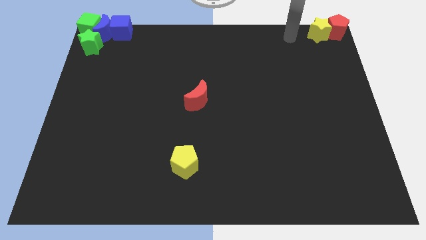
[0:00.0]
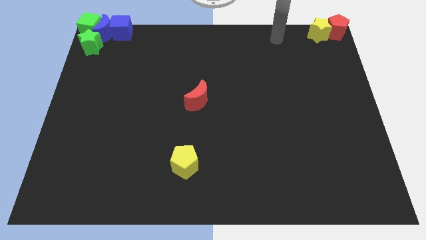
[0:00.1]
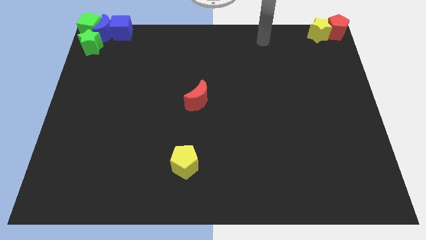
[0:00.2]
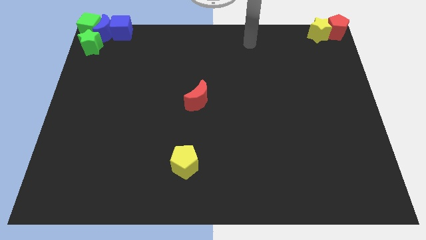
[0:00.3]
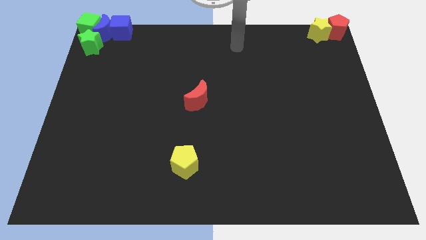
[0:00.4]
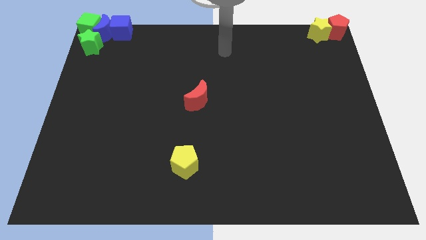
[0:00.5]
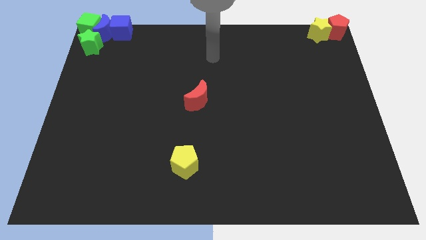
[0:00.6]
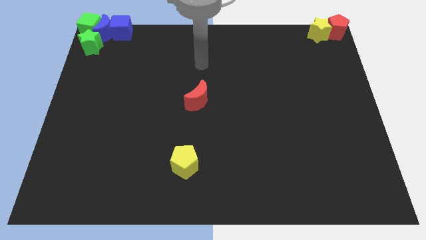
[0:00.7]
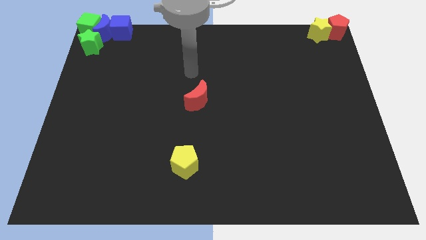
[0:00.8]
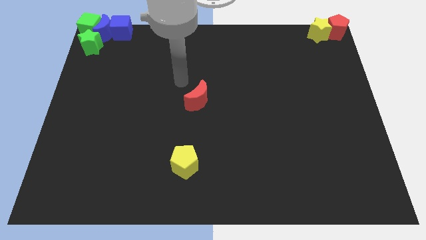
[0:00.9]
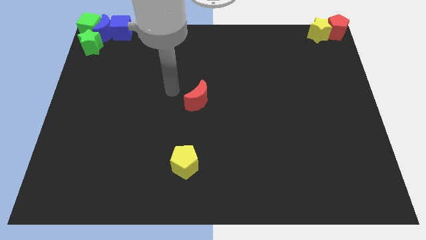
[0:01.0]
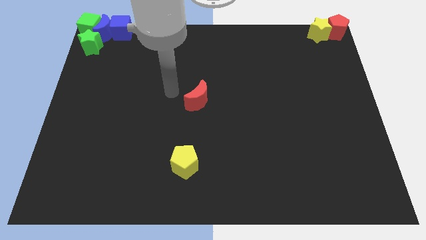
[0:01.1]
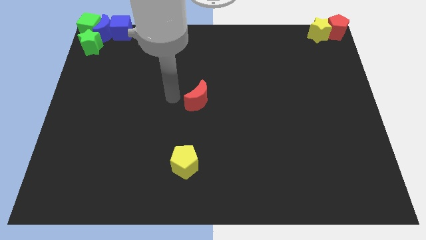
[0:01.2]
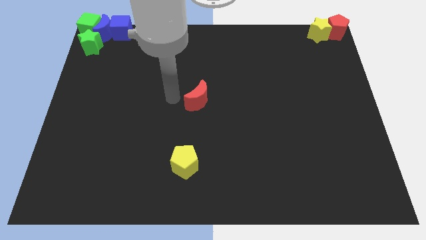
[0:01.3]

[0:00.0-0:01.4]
place your arm to the left of the red moon

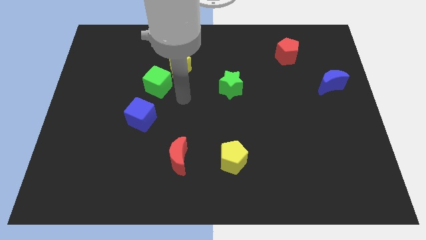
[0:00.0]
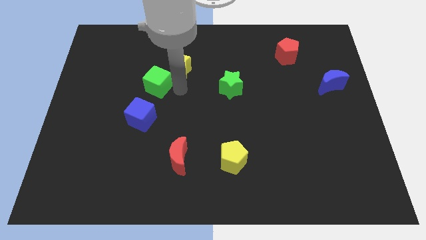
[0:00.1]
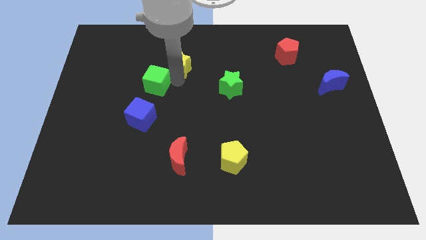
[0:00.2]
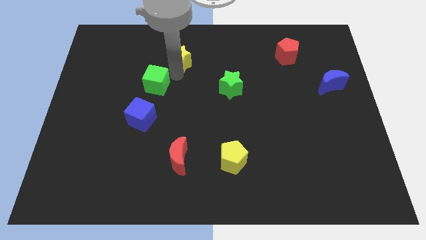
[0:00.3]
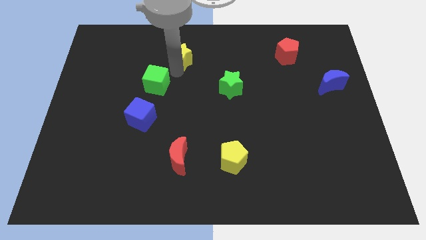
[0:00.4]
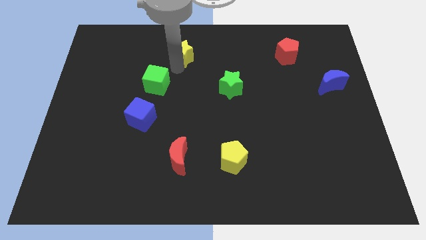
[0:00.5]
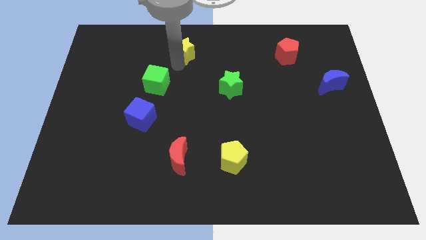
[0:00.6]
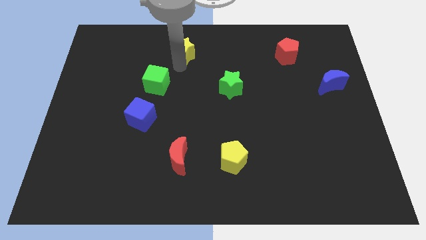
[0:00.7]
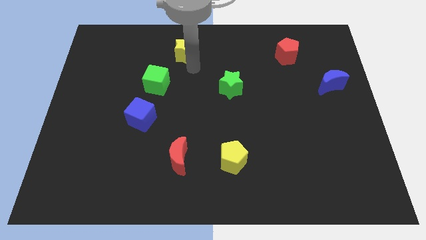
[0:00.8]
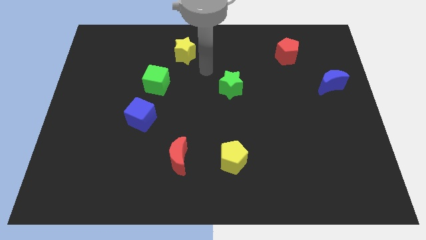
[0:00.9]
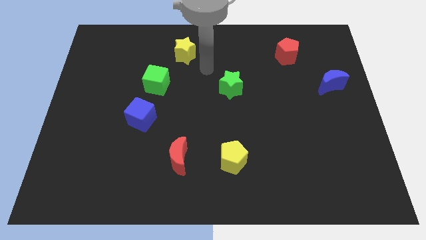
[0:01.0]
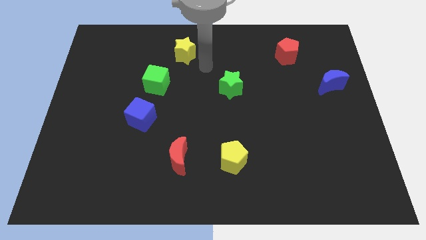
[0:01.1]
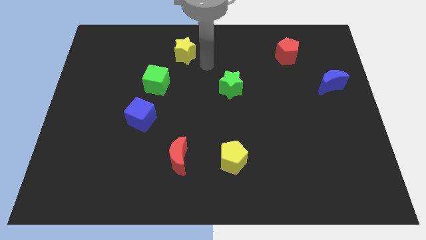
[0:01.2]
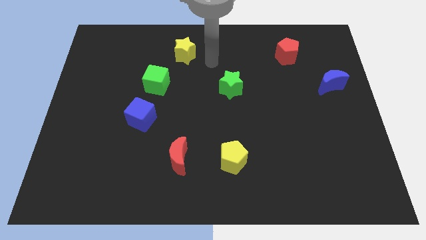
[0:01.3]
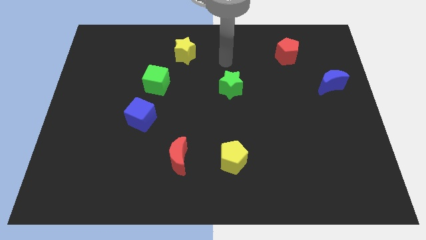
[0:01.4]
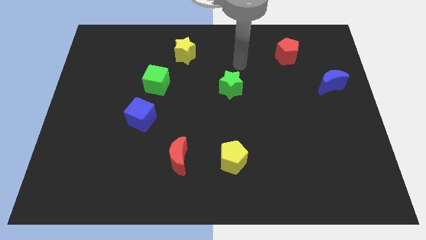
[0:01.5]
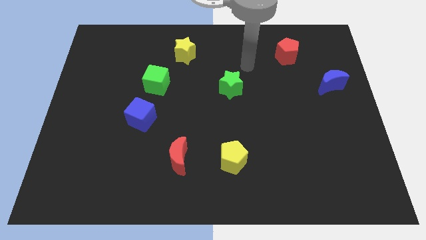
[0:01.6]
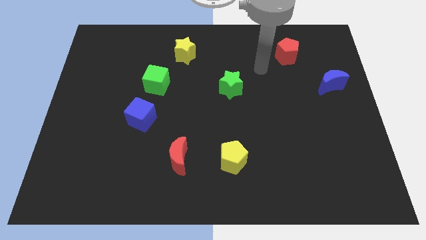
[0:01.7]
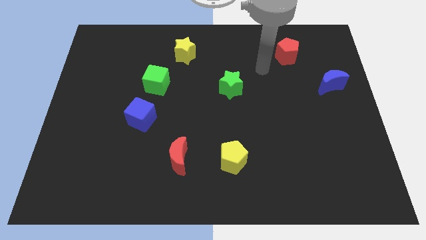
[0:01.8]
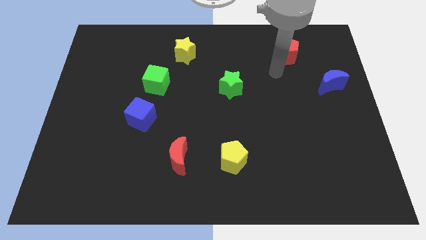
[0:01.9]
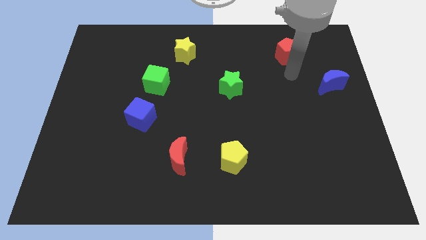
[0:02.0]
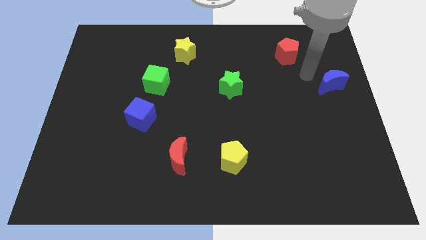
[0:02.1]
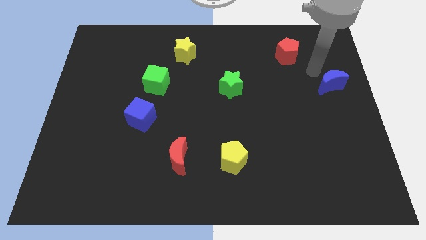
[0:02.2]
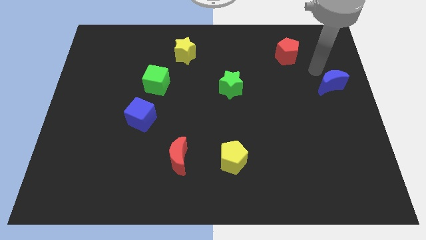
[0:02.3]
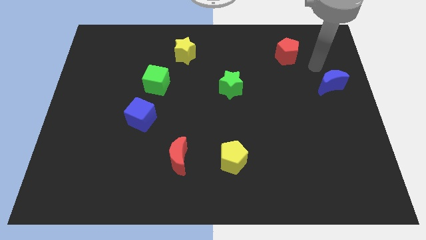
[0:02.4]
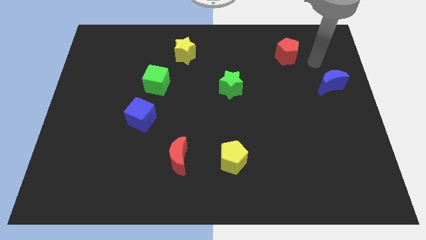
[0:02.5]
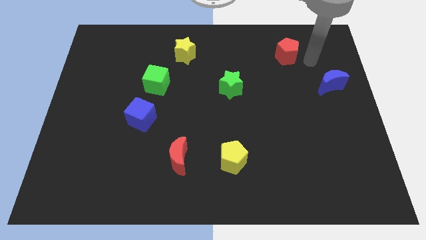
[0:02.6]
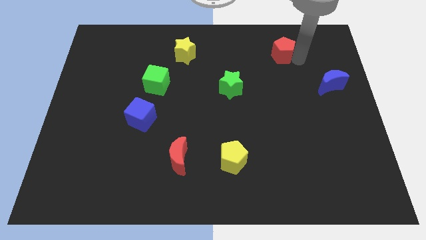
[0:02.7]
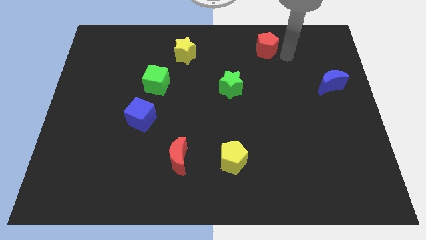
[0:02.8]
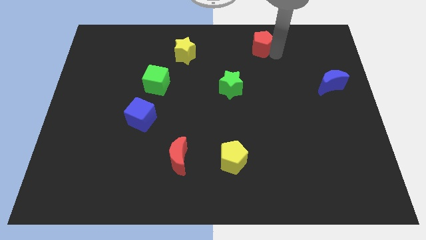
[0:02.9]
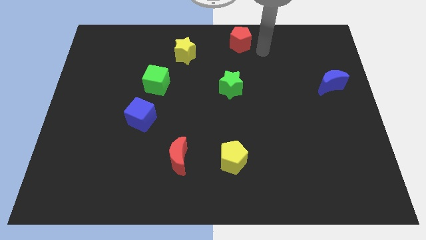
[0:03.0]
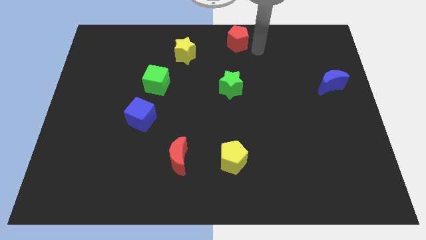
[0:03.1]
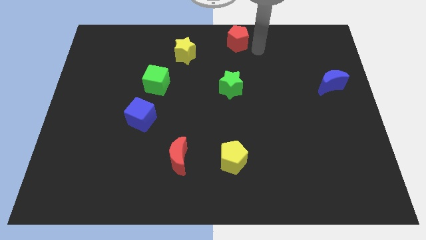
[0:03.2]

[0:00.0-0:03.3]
push the yellow star slightly up

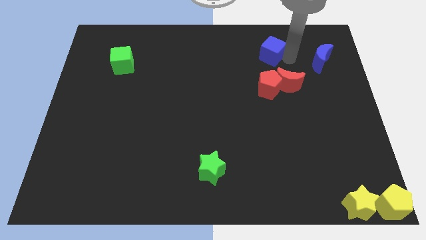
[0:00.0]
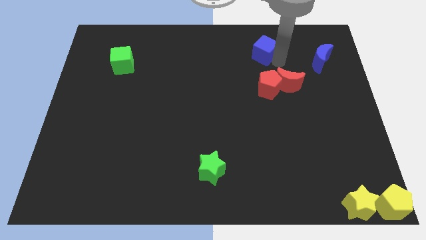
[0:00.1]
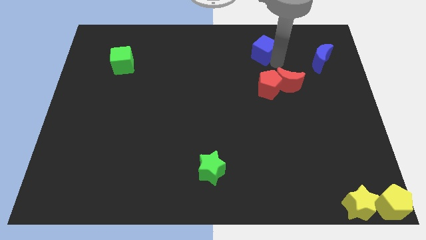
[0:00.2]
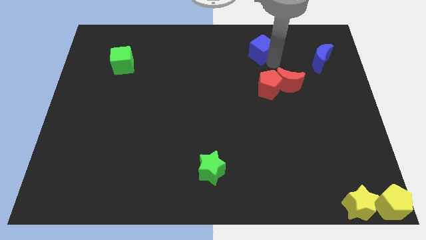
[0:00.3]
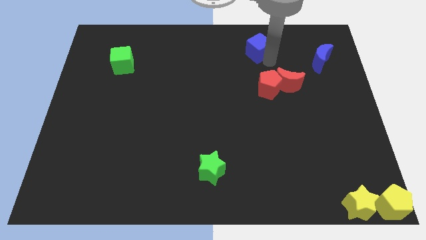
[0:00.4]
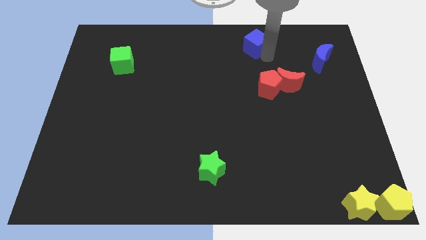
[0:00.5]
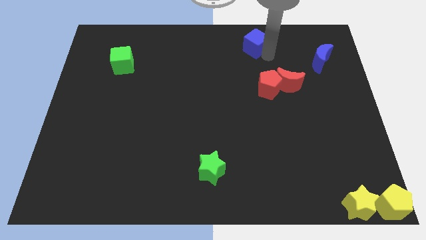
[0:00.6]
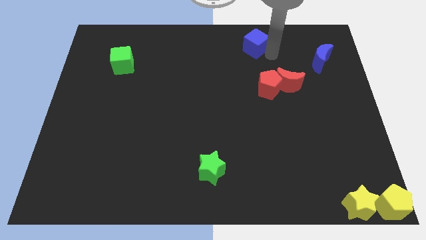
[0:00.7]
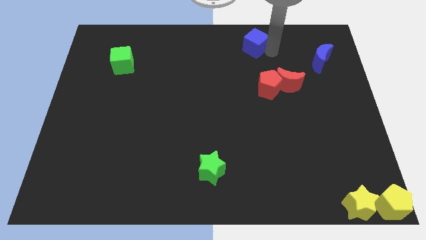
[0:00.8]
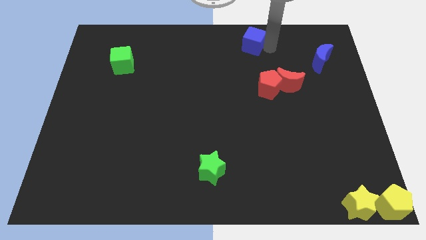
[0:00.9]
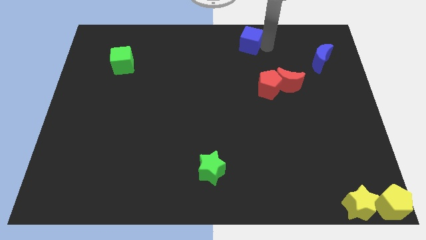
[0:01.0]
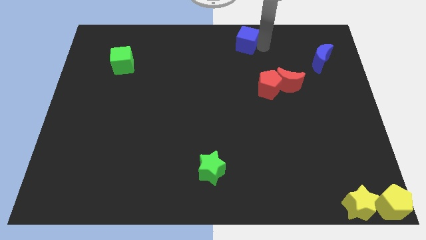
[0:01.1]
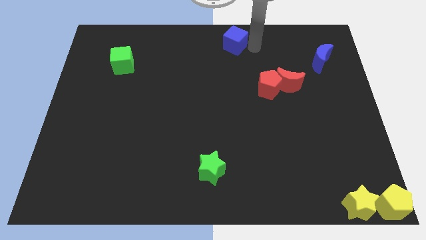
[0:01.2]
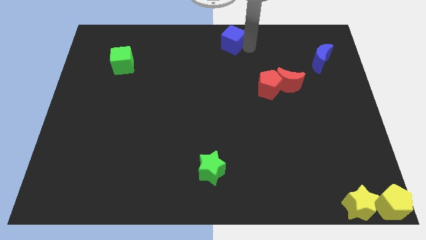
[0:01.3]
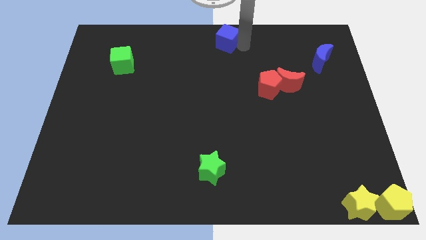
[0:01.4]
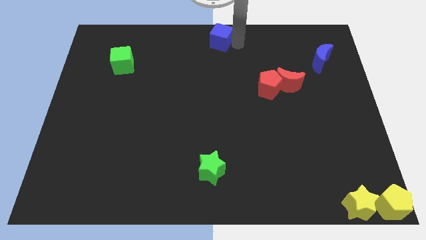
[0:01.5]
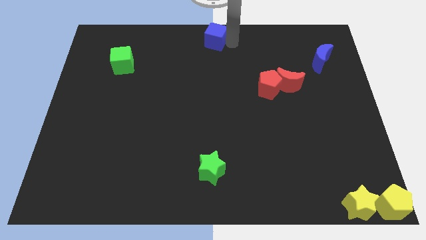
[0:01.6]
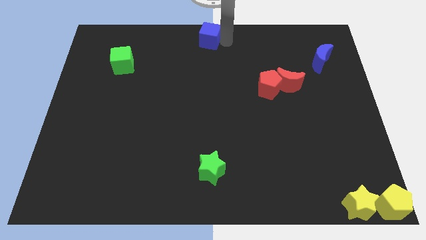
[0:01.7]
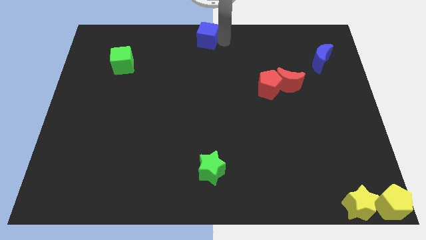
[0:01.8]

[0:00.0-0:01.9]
place the blue cube at the top center of the board

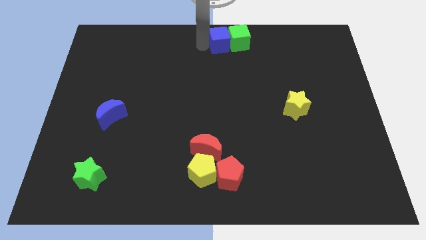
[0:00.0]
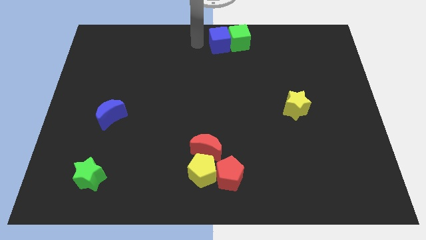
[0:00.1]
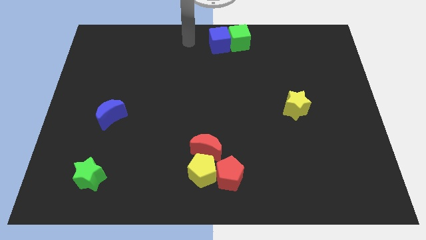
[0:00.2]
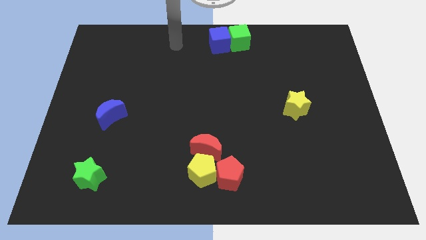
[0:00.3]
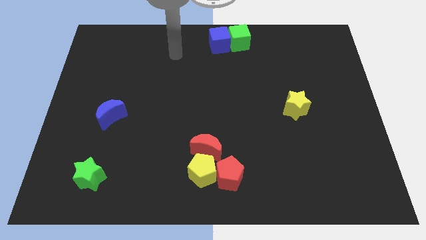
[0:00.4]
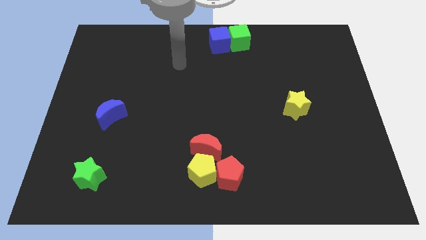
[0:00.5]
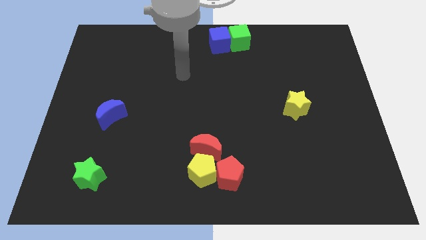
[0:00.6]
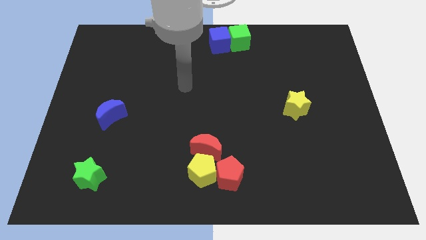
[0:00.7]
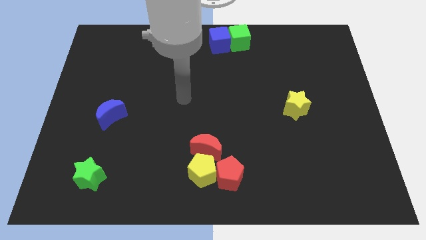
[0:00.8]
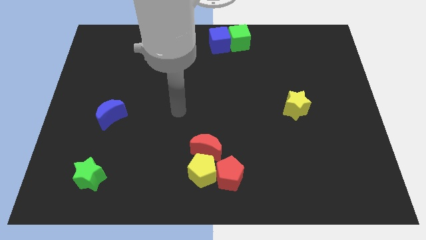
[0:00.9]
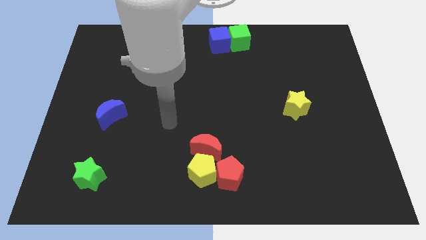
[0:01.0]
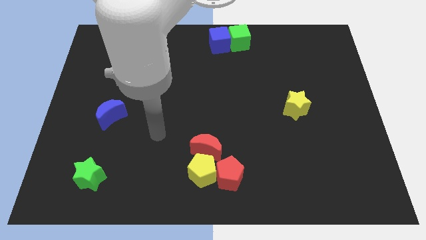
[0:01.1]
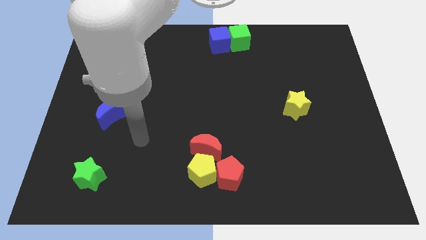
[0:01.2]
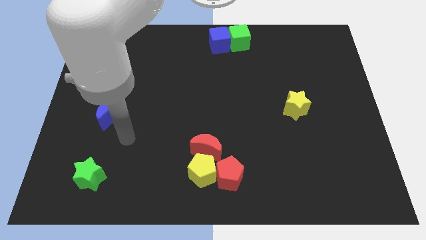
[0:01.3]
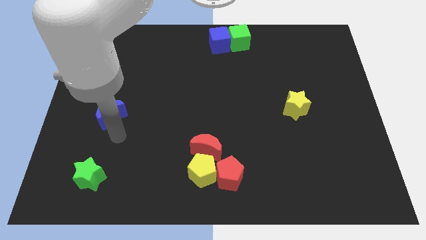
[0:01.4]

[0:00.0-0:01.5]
move away from the blue cube

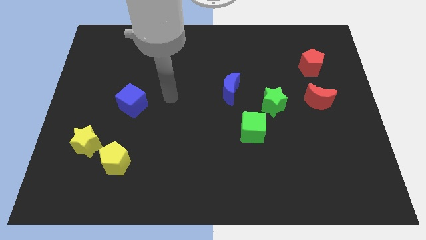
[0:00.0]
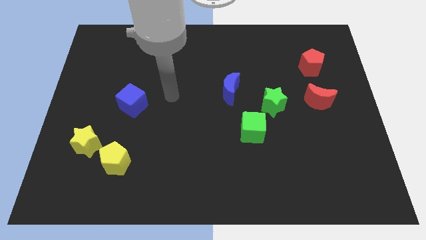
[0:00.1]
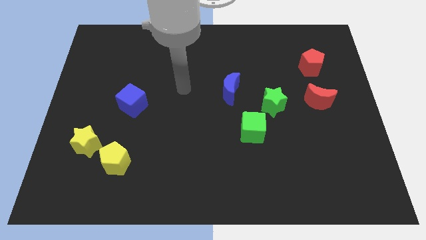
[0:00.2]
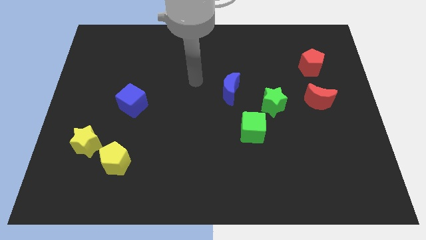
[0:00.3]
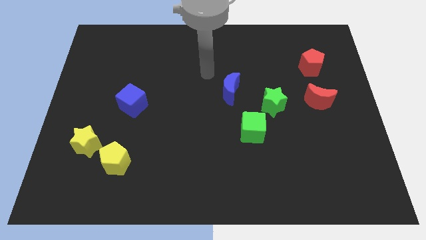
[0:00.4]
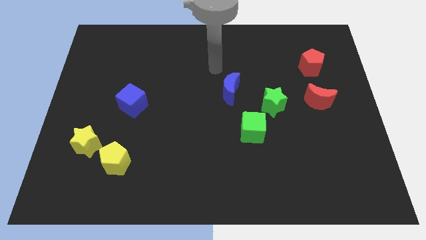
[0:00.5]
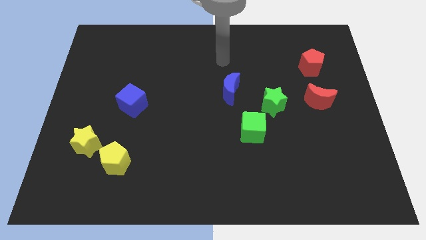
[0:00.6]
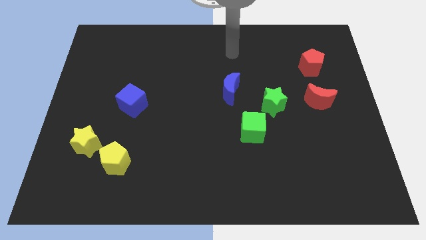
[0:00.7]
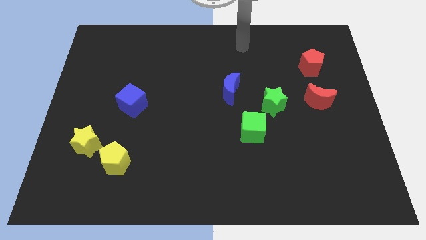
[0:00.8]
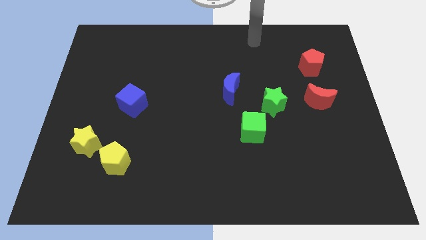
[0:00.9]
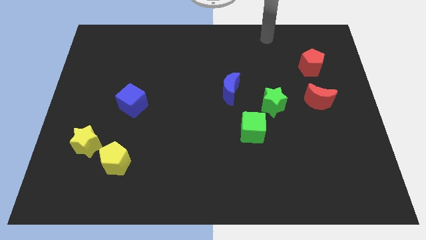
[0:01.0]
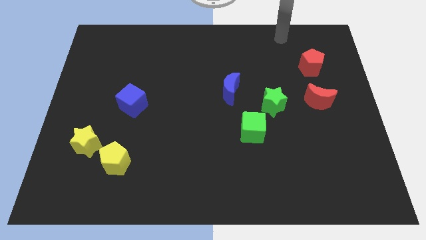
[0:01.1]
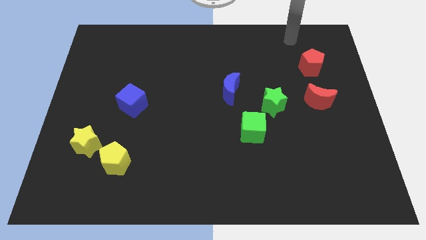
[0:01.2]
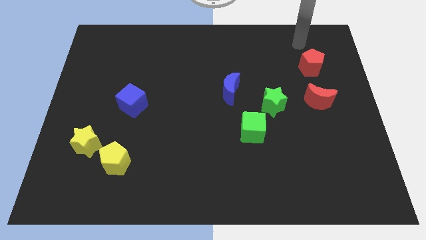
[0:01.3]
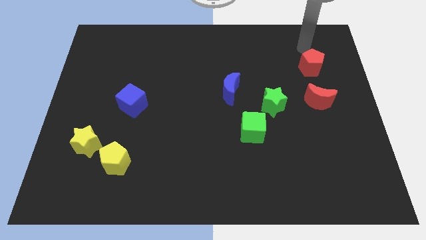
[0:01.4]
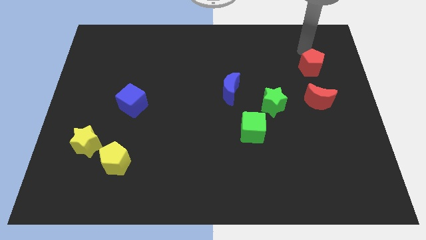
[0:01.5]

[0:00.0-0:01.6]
place your arm on the top of the red pentagon
